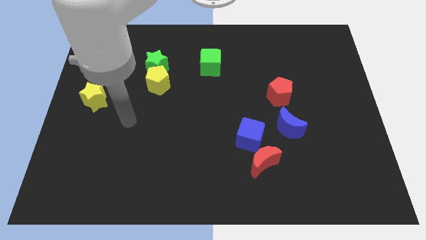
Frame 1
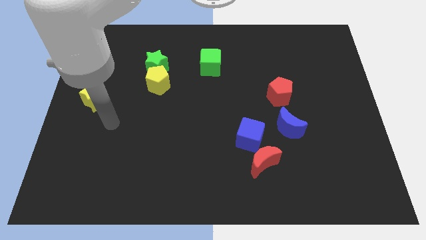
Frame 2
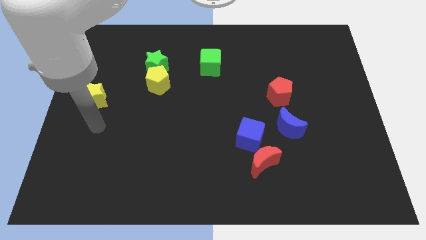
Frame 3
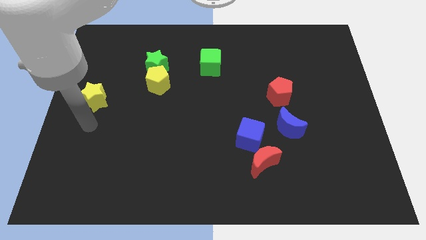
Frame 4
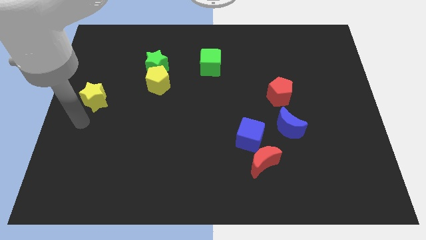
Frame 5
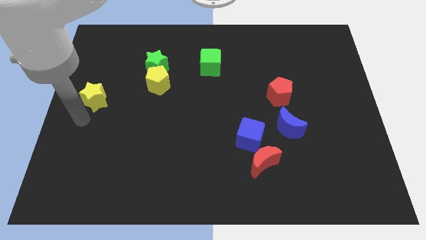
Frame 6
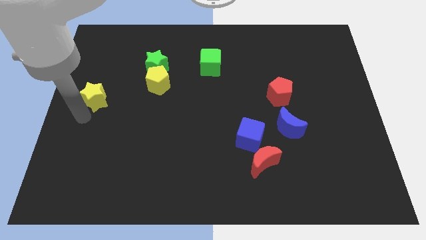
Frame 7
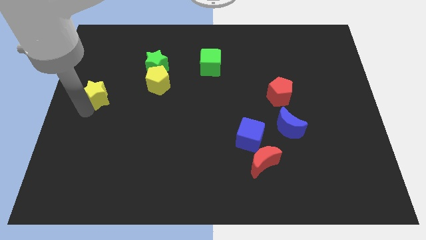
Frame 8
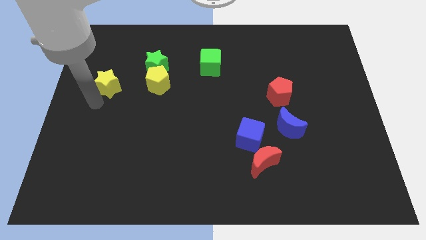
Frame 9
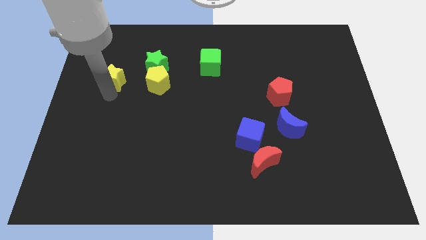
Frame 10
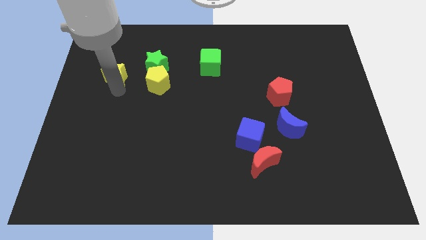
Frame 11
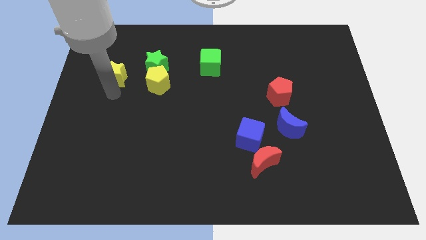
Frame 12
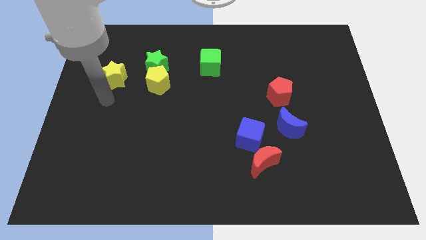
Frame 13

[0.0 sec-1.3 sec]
place the yellow star left to the green star

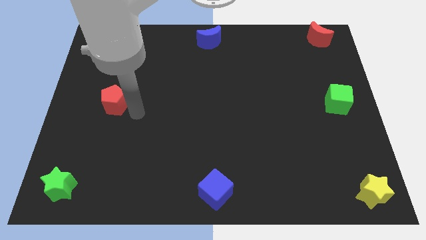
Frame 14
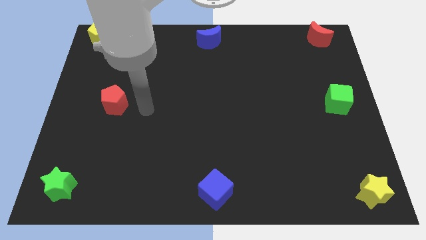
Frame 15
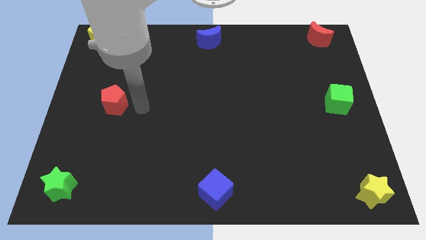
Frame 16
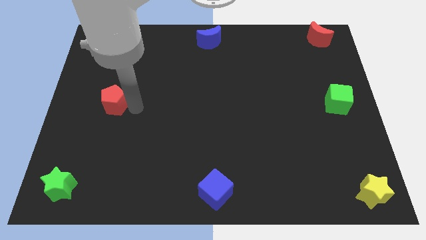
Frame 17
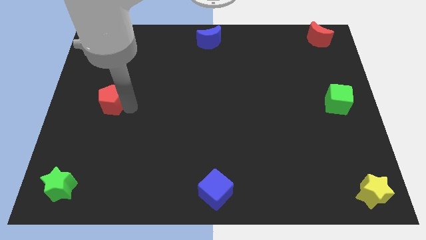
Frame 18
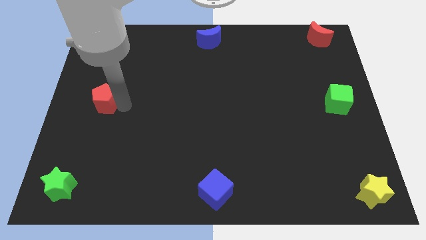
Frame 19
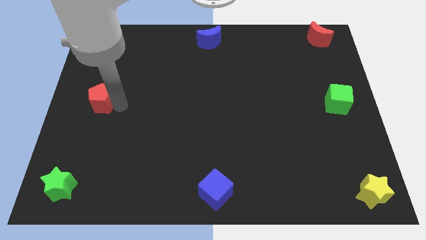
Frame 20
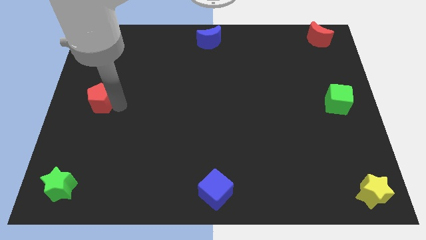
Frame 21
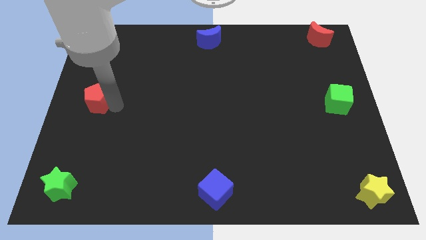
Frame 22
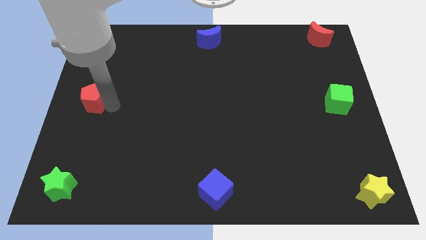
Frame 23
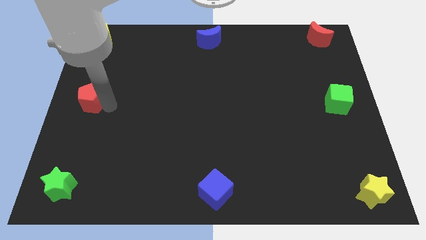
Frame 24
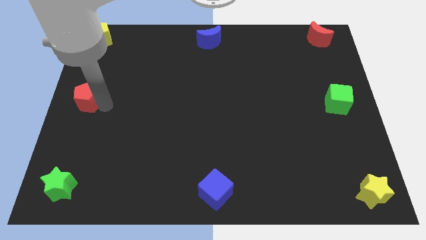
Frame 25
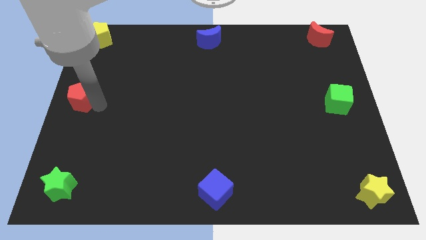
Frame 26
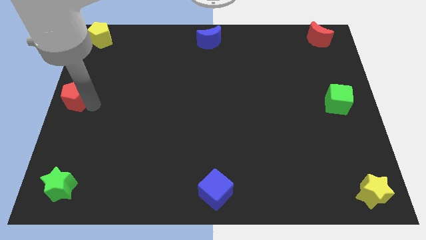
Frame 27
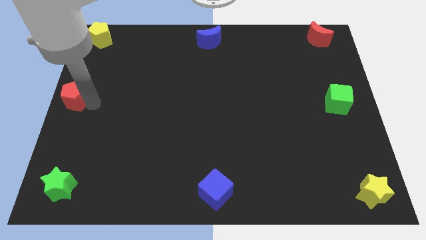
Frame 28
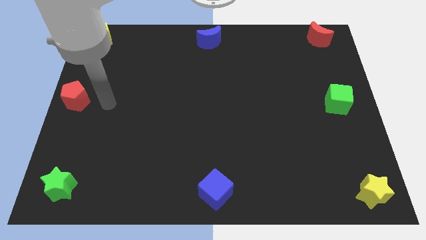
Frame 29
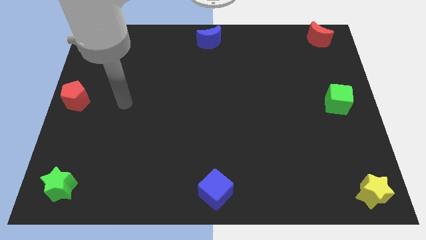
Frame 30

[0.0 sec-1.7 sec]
push the red pentagon towards the center left side of the board

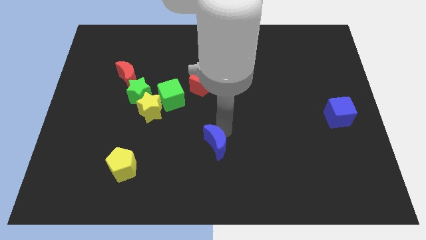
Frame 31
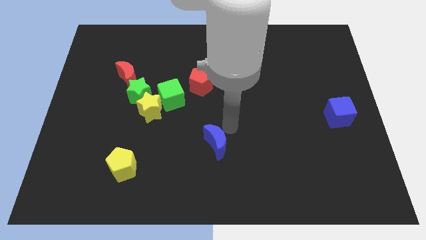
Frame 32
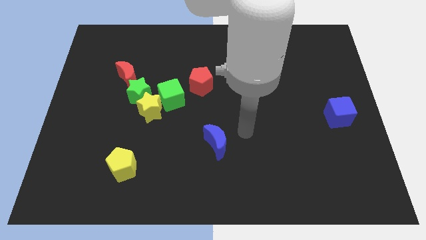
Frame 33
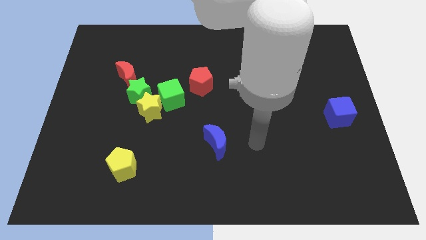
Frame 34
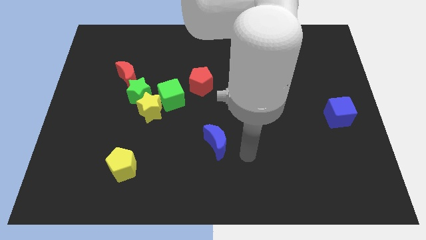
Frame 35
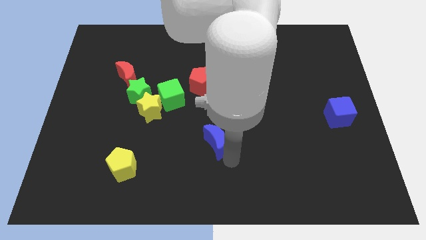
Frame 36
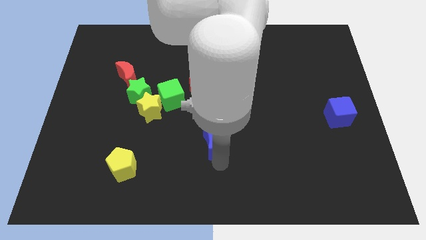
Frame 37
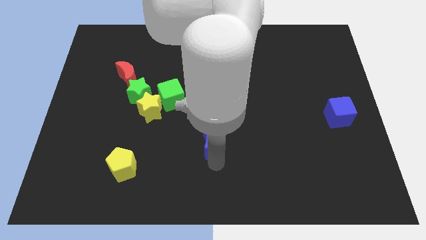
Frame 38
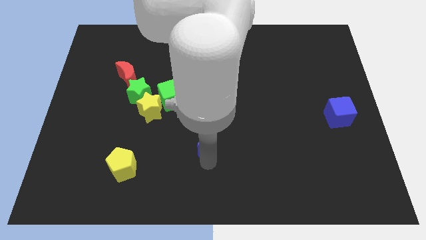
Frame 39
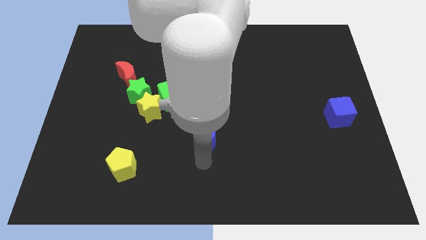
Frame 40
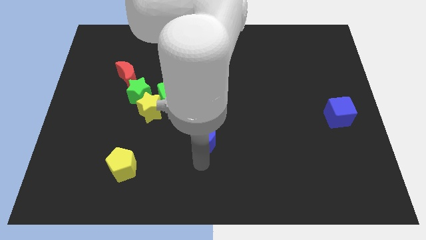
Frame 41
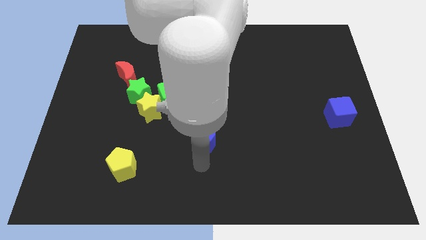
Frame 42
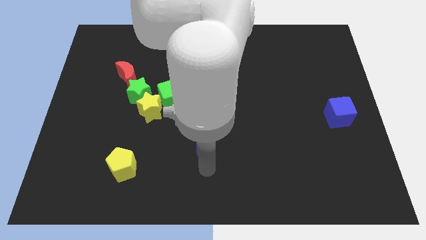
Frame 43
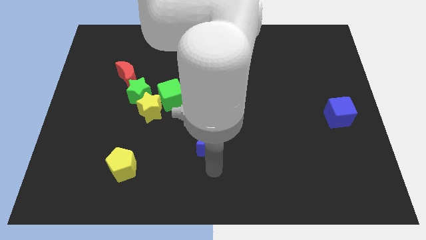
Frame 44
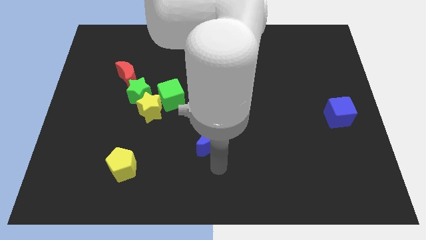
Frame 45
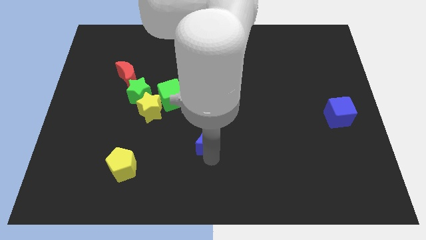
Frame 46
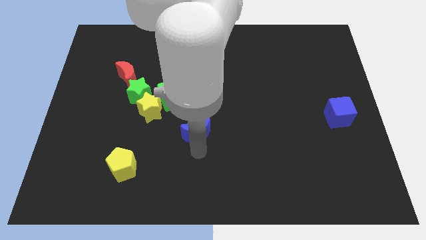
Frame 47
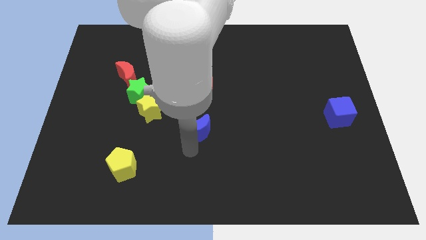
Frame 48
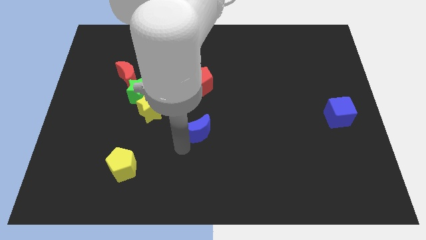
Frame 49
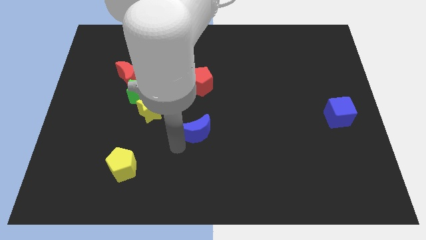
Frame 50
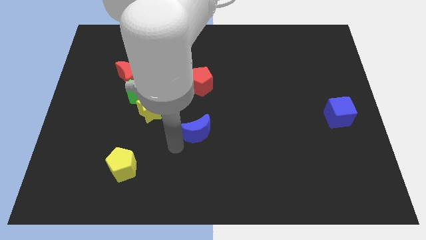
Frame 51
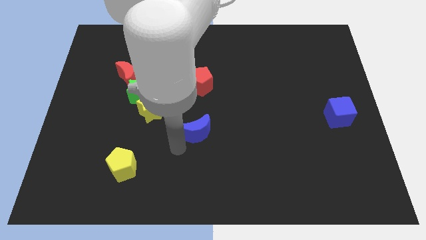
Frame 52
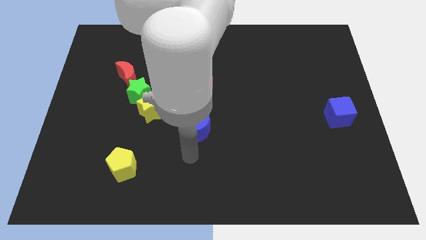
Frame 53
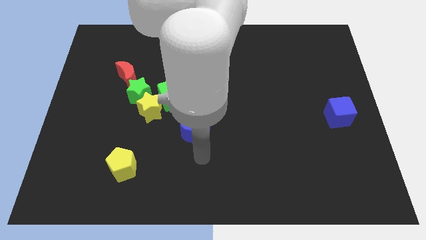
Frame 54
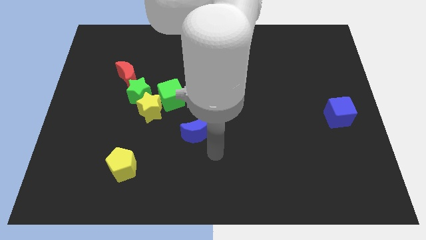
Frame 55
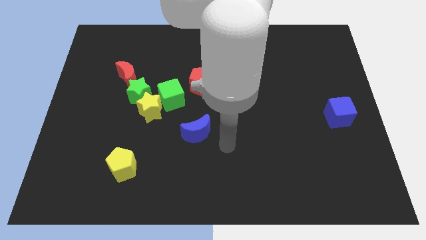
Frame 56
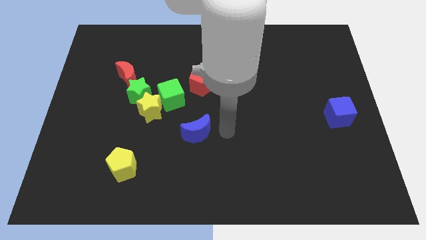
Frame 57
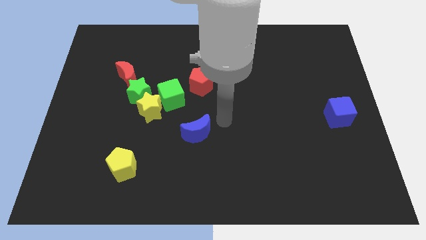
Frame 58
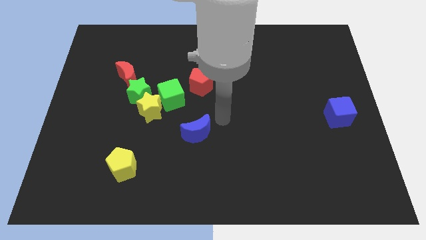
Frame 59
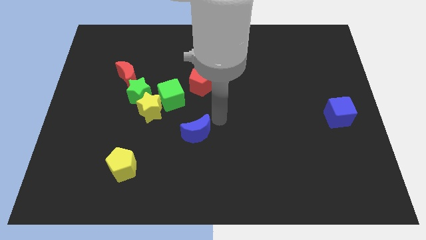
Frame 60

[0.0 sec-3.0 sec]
place the blue moon diagonally to green cube

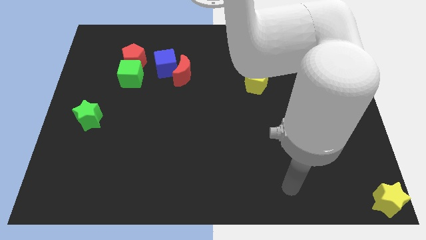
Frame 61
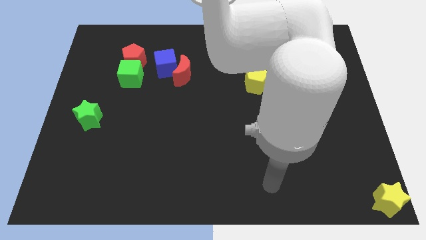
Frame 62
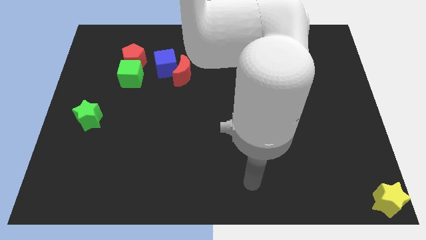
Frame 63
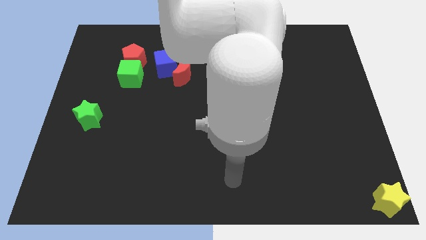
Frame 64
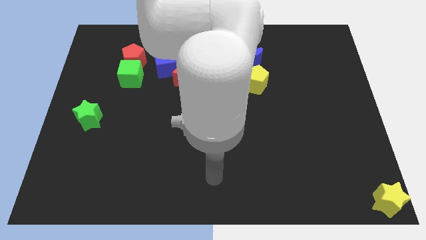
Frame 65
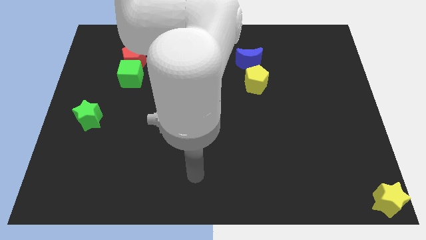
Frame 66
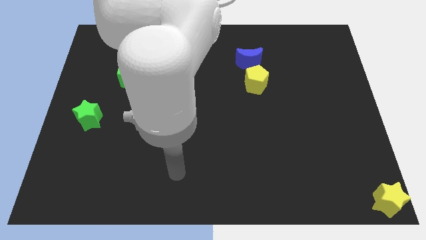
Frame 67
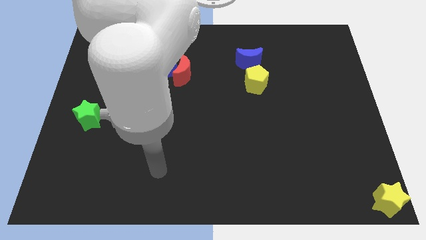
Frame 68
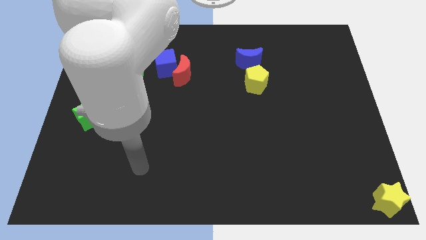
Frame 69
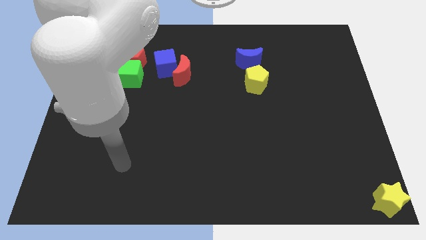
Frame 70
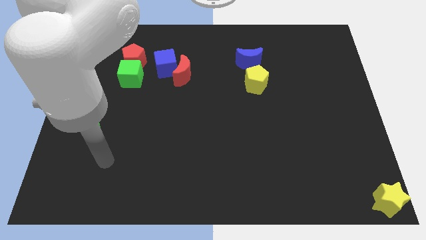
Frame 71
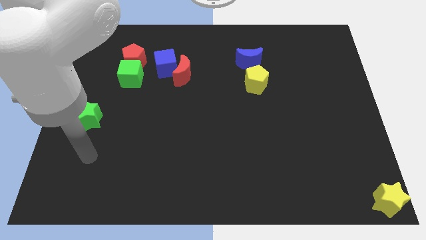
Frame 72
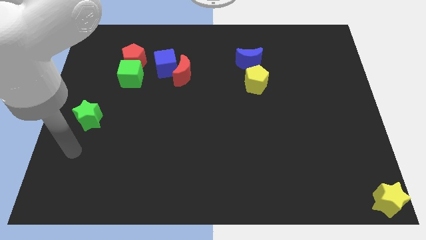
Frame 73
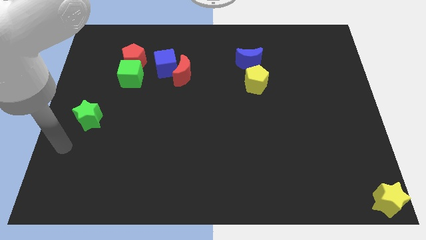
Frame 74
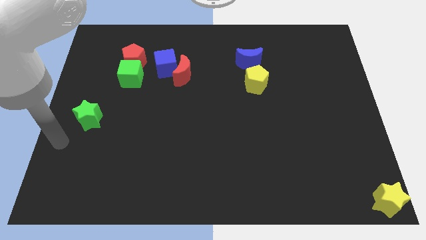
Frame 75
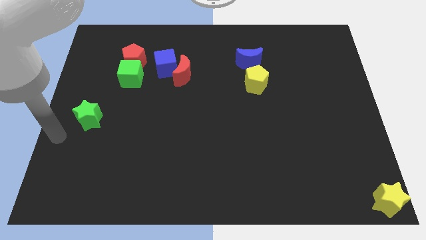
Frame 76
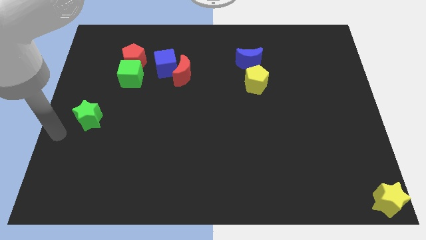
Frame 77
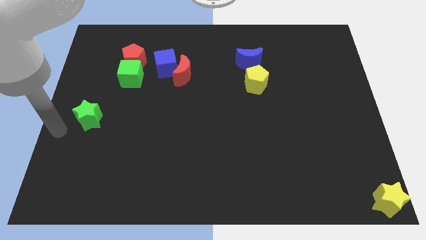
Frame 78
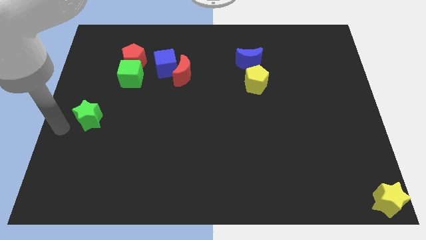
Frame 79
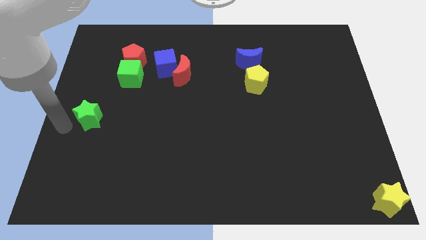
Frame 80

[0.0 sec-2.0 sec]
move your arm left to the green star

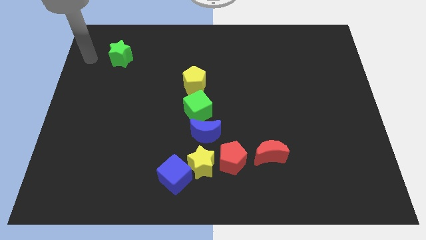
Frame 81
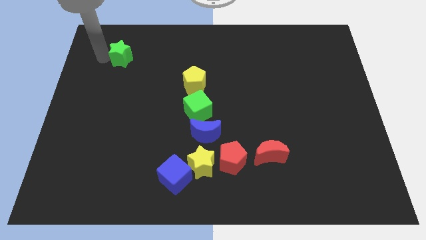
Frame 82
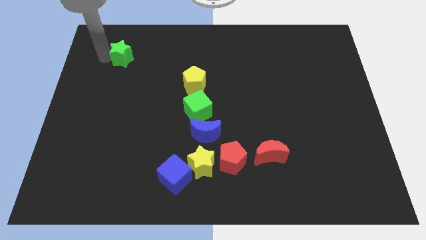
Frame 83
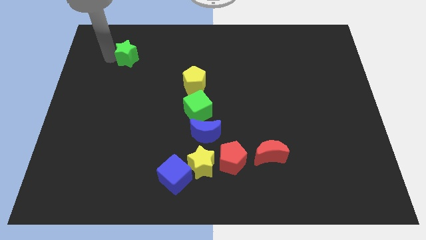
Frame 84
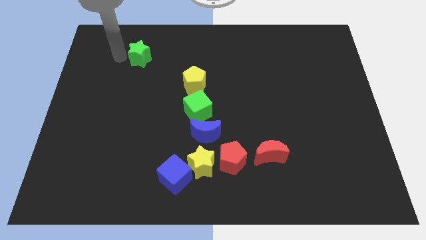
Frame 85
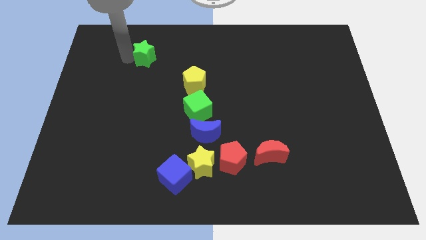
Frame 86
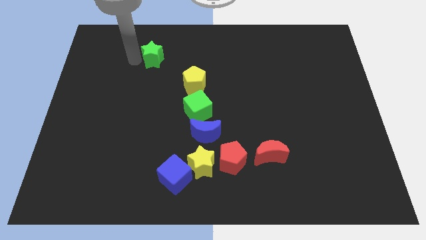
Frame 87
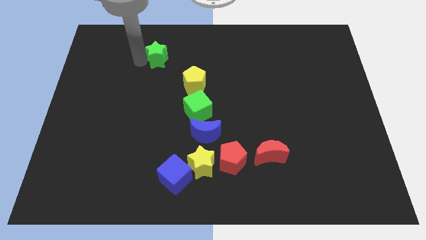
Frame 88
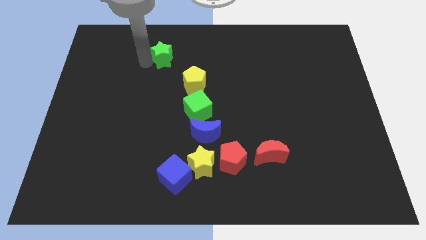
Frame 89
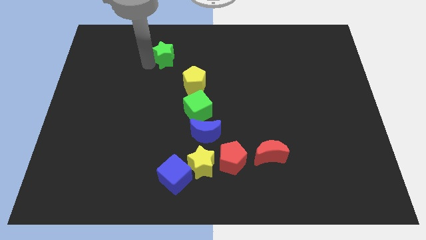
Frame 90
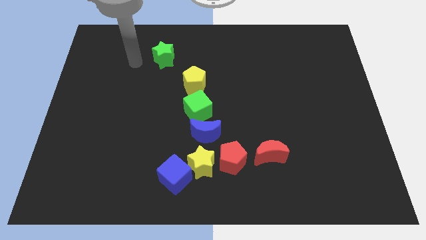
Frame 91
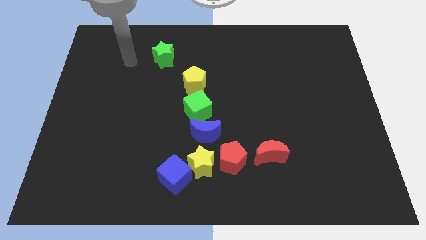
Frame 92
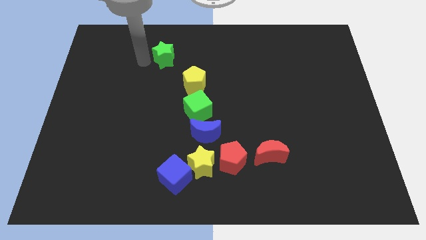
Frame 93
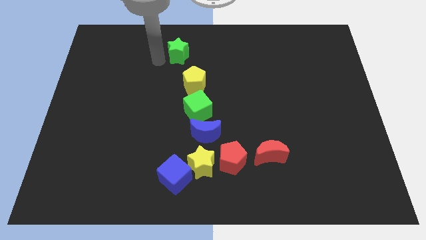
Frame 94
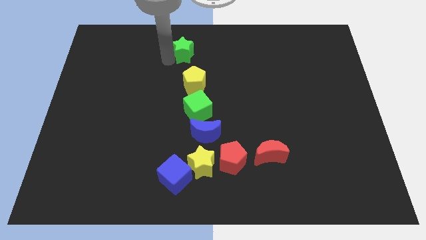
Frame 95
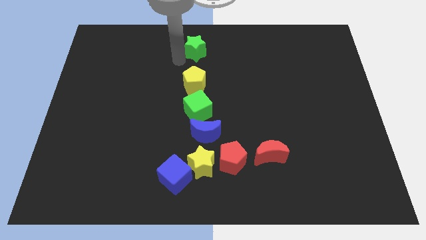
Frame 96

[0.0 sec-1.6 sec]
move the green star above the yellow pentagon
